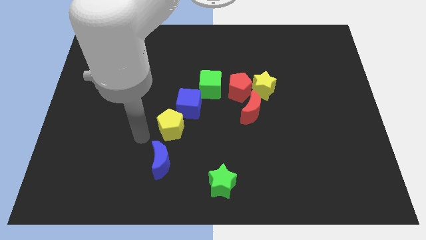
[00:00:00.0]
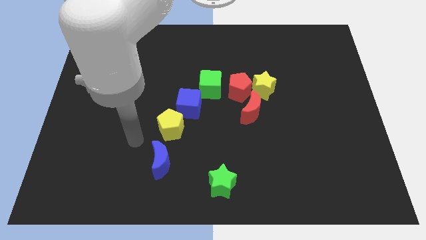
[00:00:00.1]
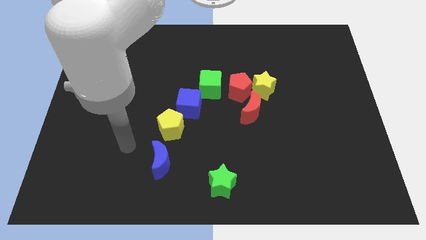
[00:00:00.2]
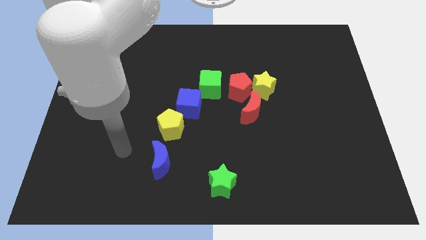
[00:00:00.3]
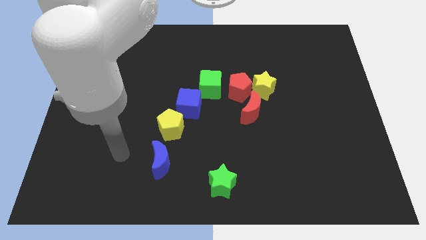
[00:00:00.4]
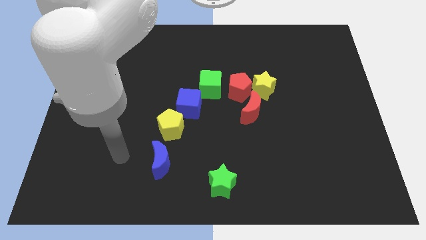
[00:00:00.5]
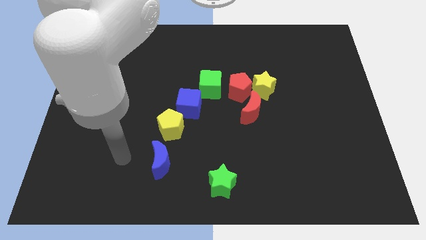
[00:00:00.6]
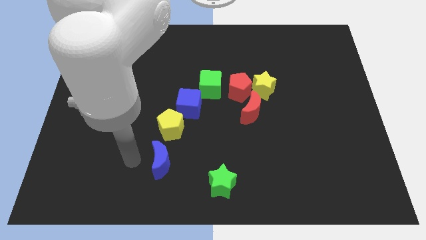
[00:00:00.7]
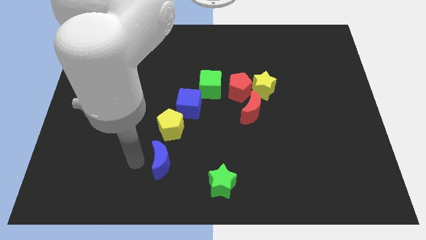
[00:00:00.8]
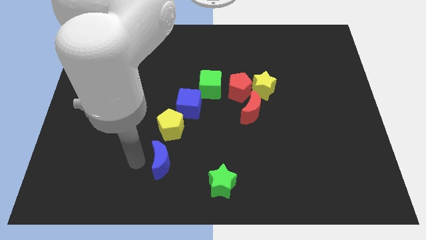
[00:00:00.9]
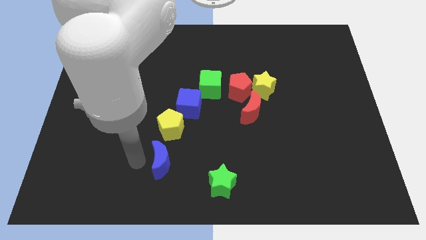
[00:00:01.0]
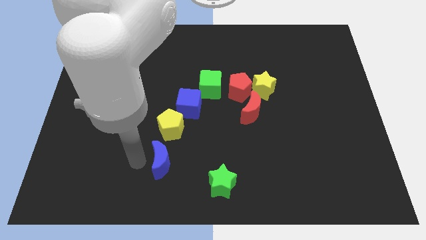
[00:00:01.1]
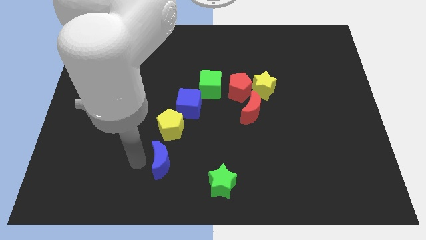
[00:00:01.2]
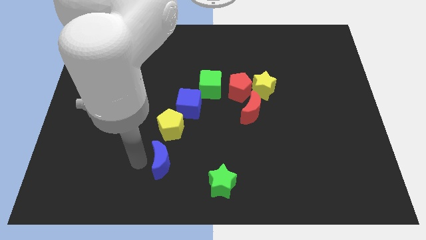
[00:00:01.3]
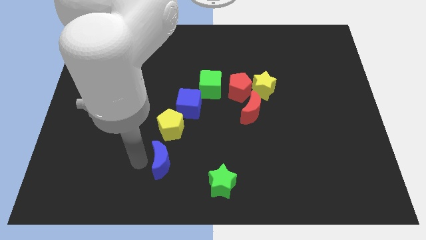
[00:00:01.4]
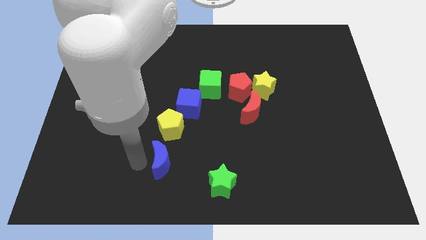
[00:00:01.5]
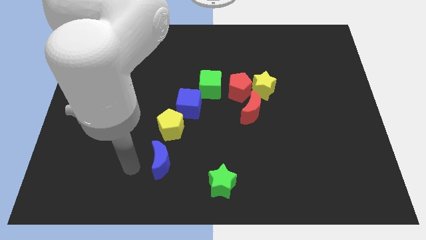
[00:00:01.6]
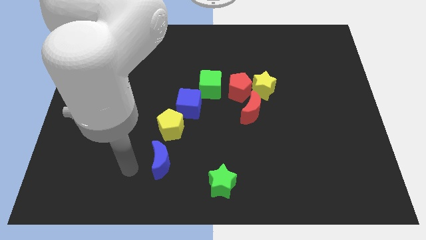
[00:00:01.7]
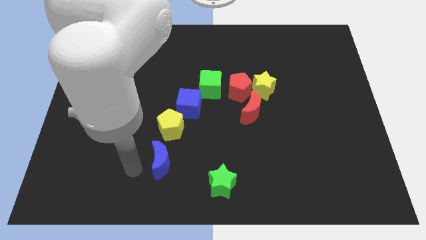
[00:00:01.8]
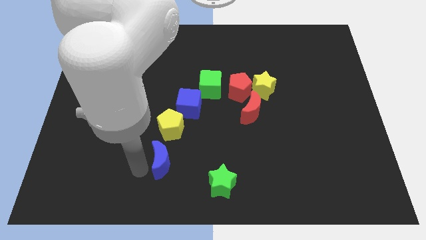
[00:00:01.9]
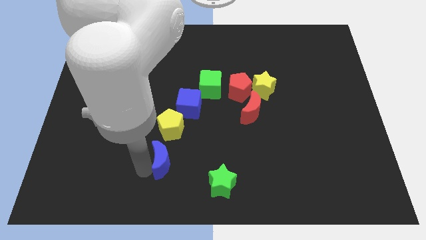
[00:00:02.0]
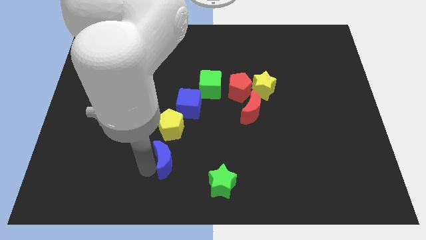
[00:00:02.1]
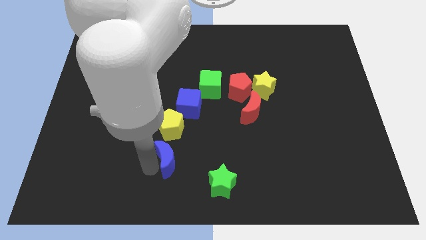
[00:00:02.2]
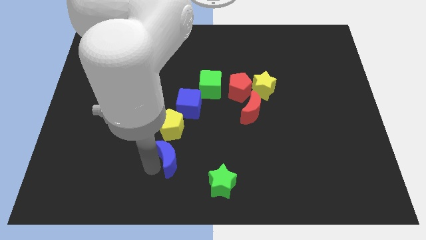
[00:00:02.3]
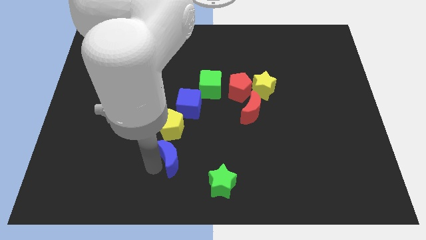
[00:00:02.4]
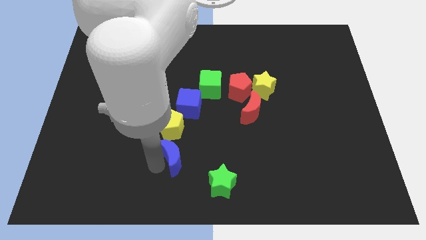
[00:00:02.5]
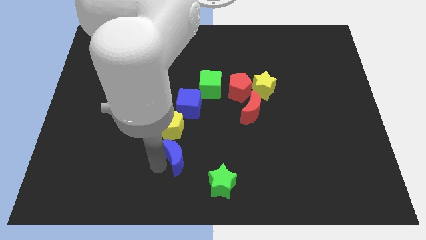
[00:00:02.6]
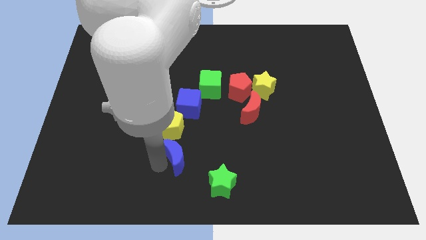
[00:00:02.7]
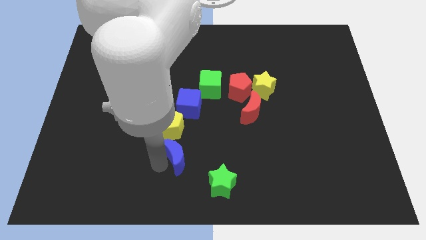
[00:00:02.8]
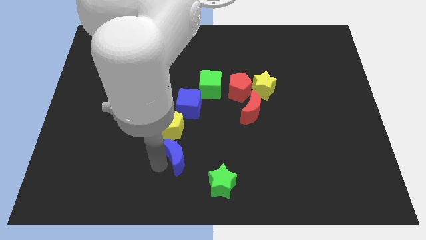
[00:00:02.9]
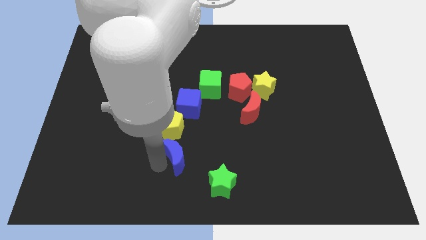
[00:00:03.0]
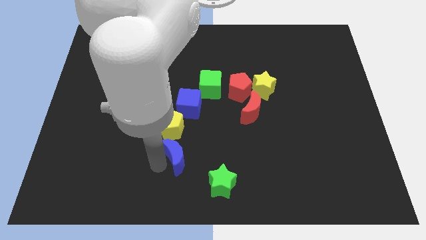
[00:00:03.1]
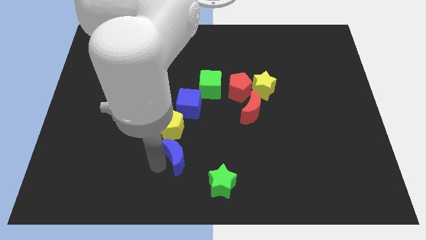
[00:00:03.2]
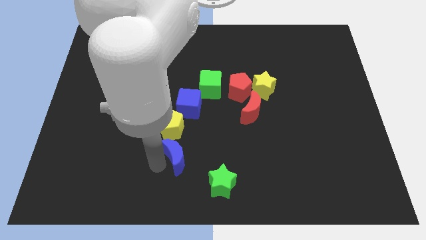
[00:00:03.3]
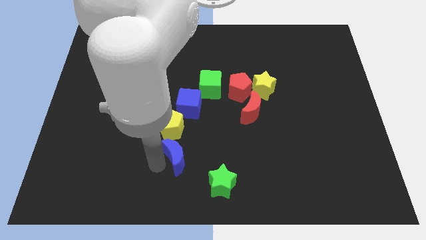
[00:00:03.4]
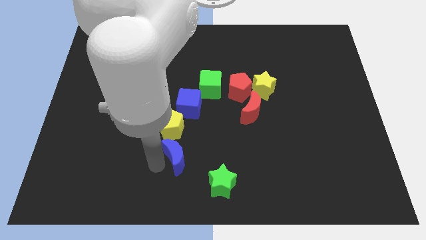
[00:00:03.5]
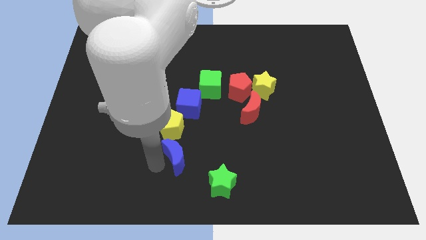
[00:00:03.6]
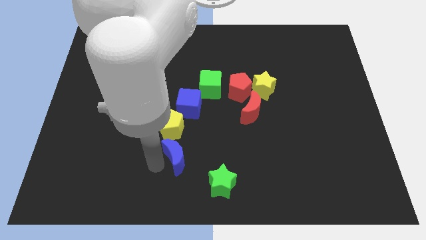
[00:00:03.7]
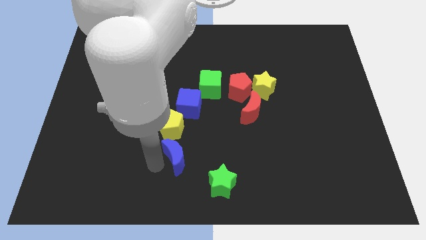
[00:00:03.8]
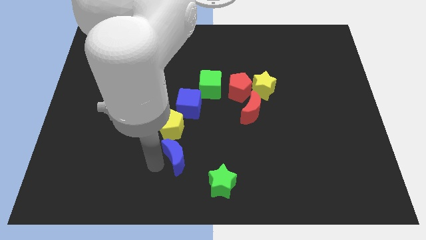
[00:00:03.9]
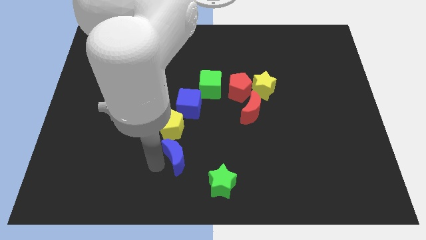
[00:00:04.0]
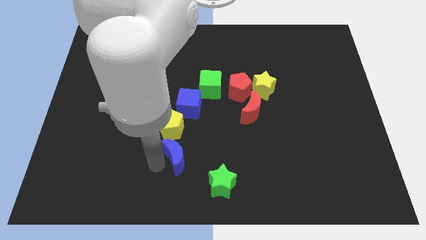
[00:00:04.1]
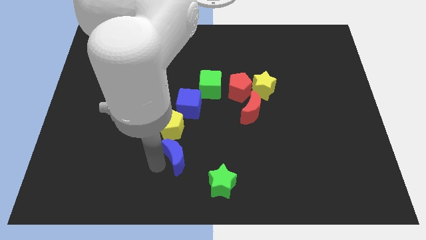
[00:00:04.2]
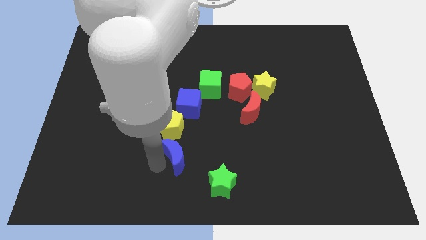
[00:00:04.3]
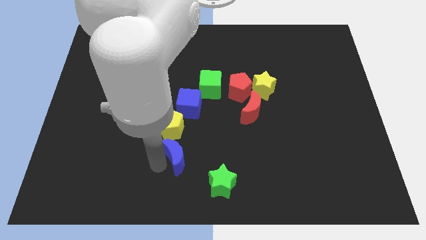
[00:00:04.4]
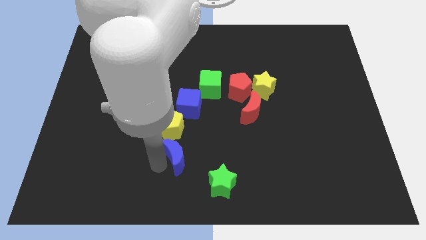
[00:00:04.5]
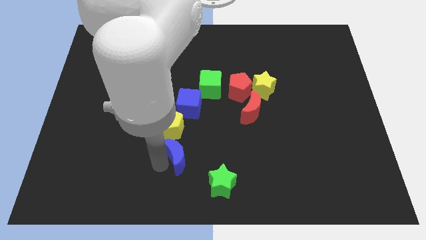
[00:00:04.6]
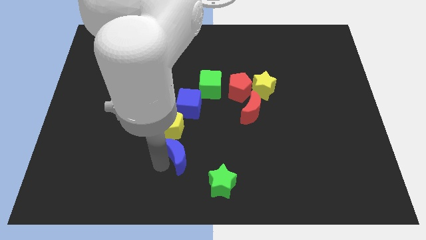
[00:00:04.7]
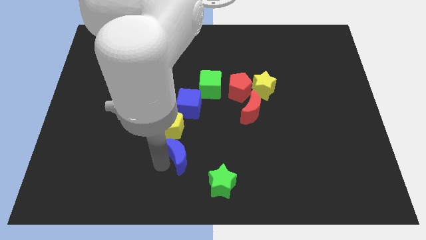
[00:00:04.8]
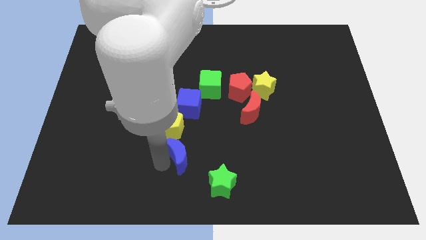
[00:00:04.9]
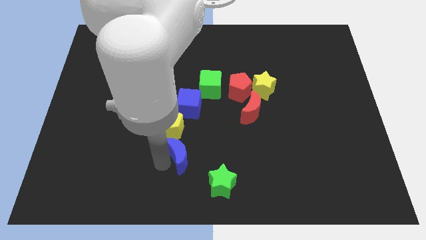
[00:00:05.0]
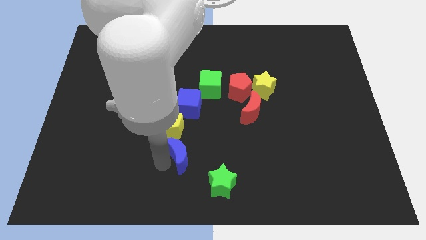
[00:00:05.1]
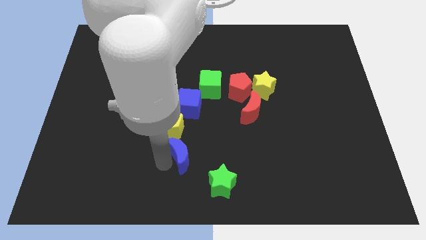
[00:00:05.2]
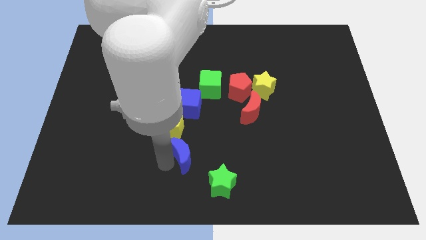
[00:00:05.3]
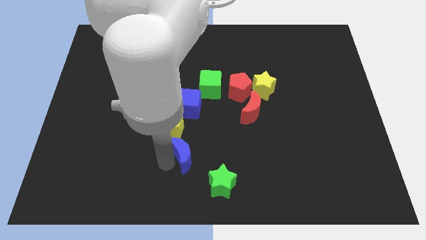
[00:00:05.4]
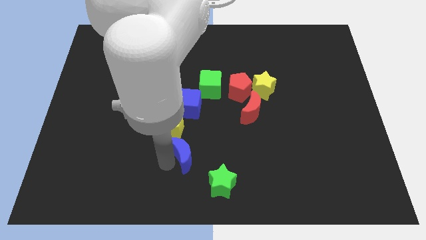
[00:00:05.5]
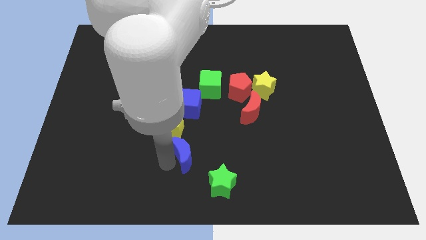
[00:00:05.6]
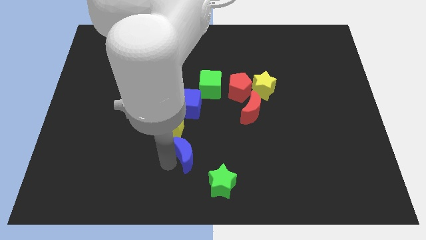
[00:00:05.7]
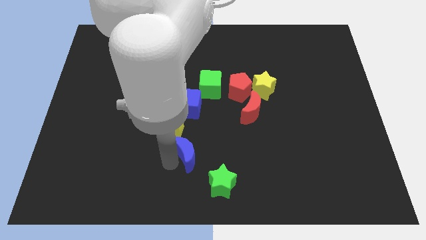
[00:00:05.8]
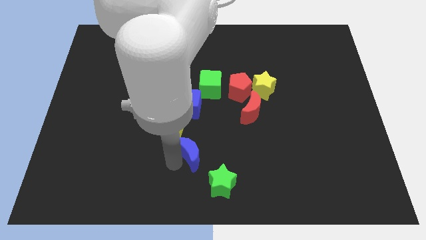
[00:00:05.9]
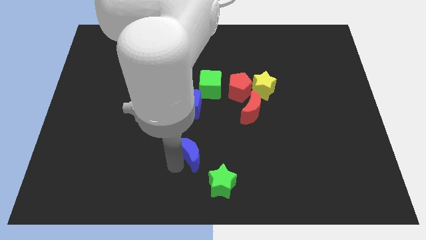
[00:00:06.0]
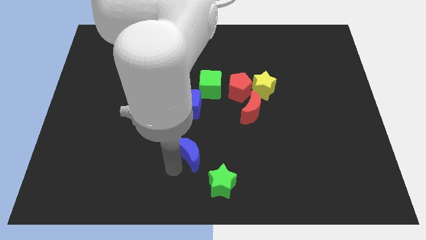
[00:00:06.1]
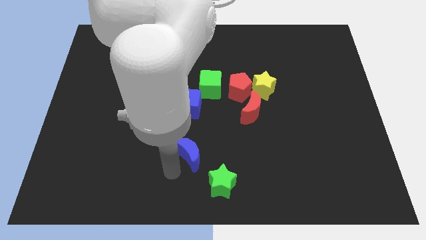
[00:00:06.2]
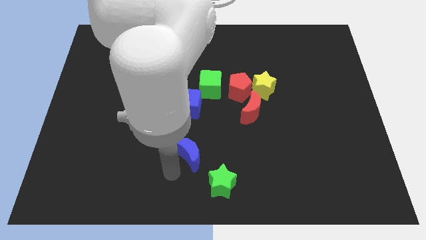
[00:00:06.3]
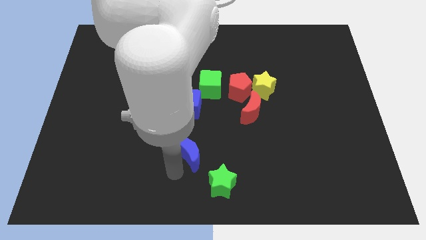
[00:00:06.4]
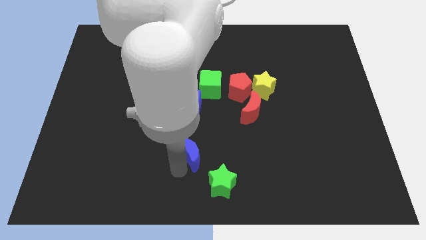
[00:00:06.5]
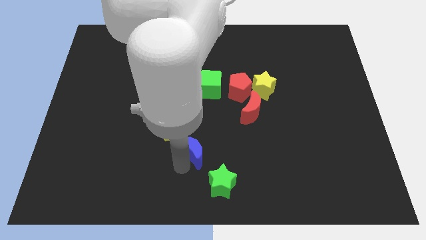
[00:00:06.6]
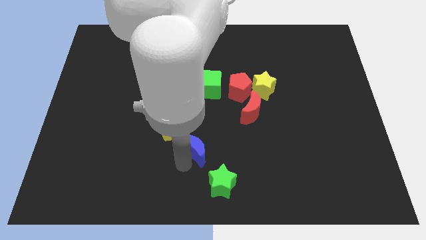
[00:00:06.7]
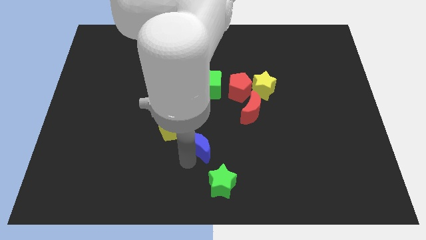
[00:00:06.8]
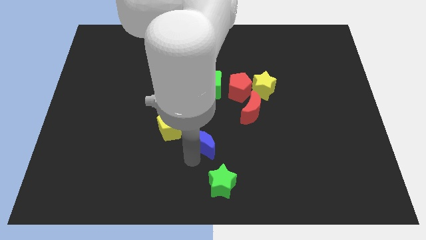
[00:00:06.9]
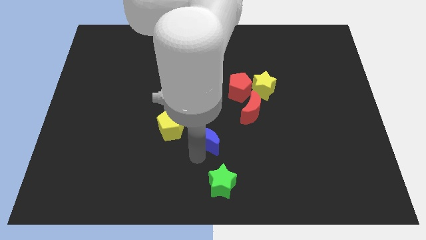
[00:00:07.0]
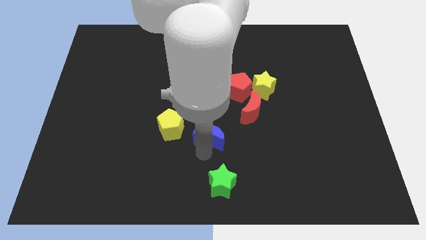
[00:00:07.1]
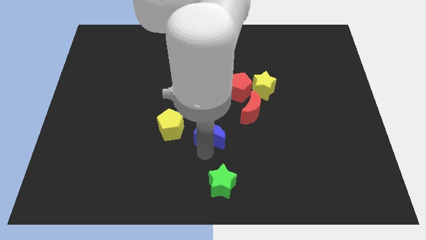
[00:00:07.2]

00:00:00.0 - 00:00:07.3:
push the blue crescent to the right of the yellow pentagon

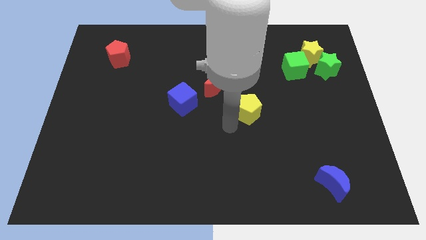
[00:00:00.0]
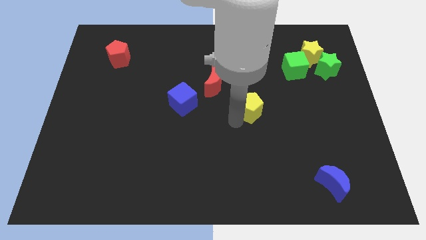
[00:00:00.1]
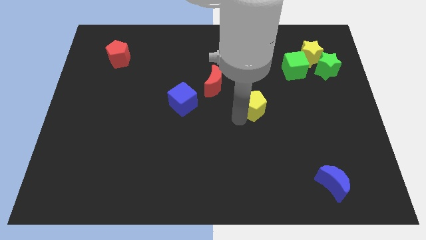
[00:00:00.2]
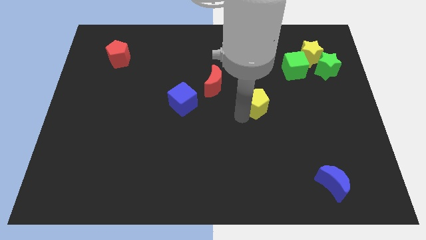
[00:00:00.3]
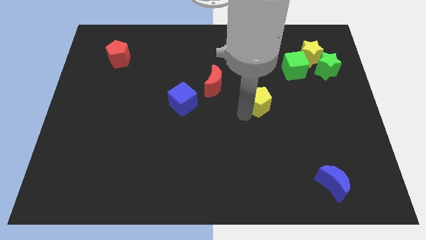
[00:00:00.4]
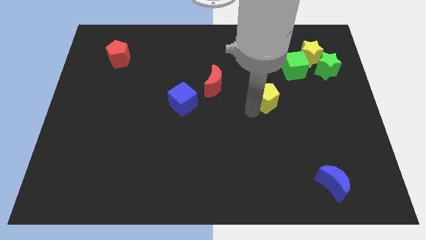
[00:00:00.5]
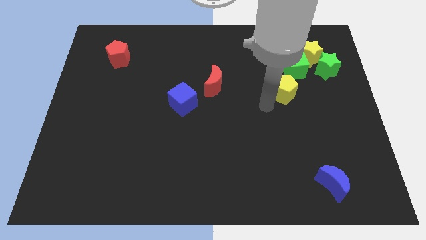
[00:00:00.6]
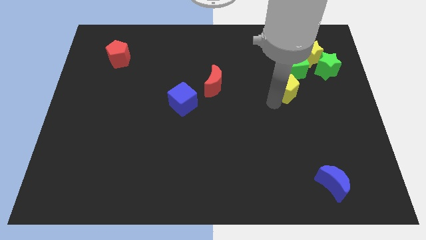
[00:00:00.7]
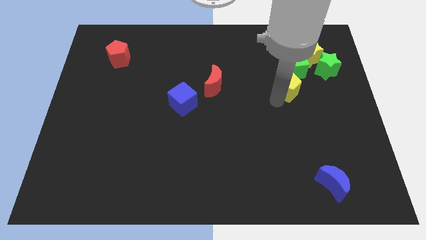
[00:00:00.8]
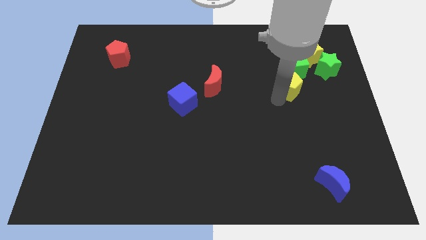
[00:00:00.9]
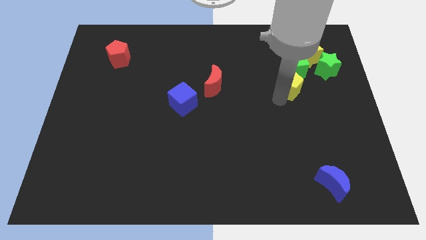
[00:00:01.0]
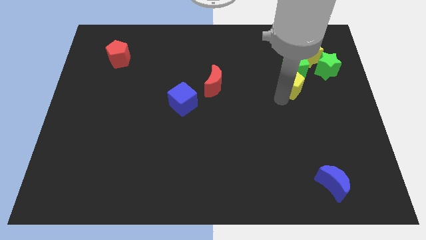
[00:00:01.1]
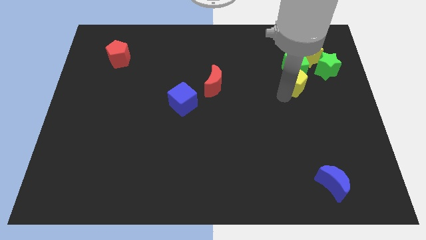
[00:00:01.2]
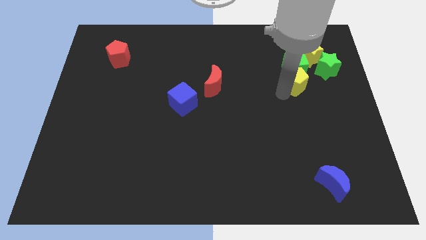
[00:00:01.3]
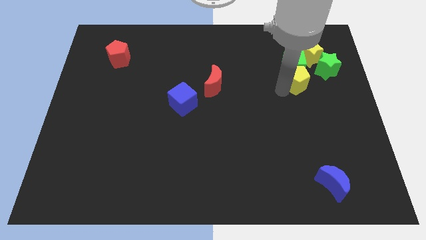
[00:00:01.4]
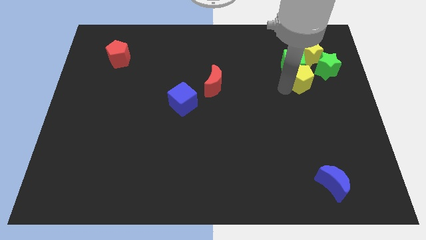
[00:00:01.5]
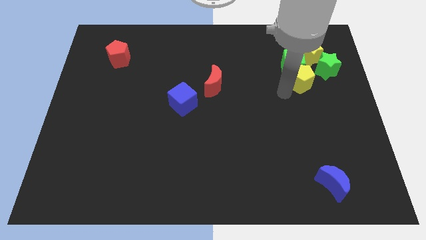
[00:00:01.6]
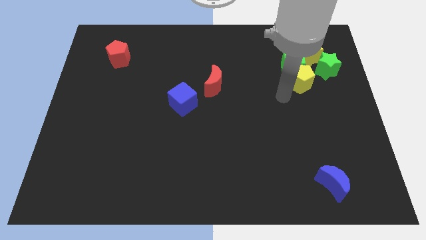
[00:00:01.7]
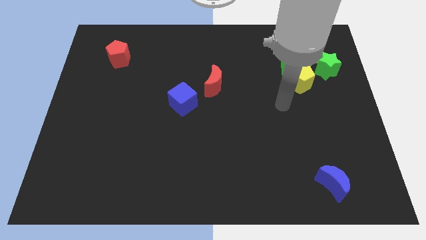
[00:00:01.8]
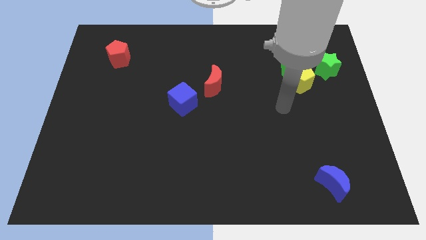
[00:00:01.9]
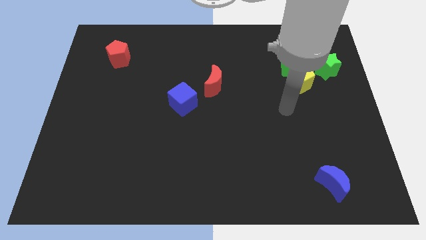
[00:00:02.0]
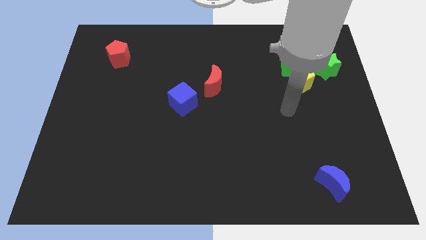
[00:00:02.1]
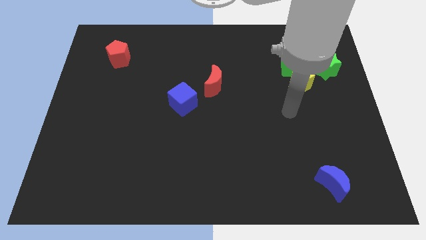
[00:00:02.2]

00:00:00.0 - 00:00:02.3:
place the yellow pentagon below the green cube
